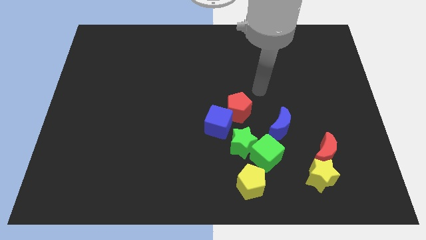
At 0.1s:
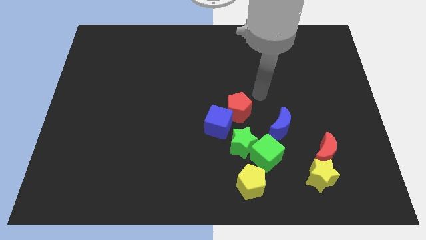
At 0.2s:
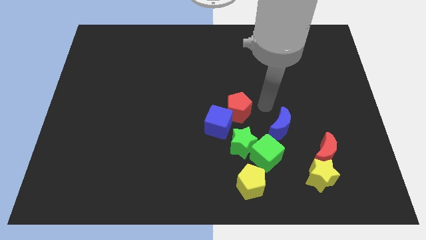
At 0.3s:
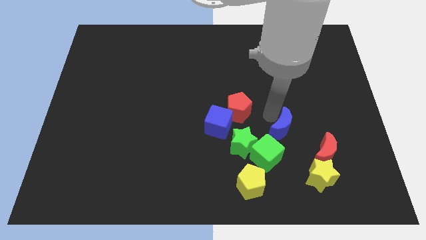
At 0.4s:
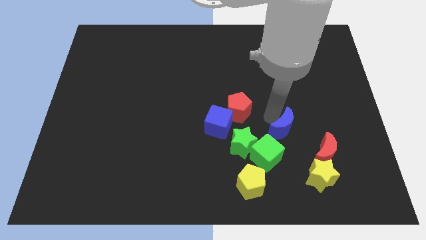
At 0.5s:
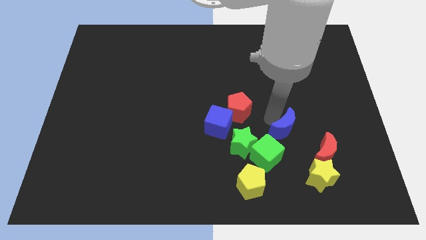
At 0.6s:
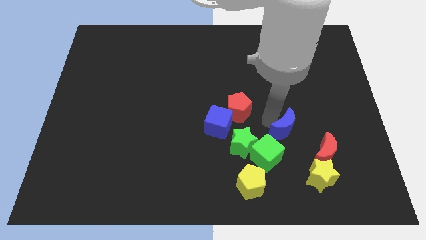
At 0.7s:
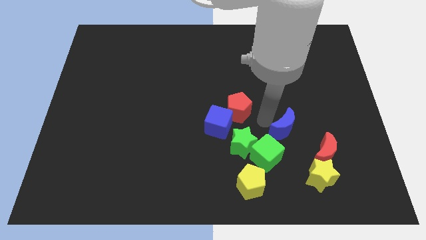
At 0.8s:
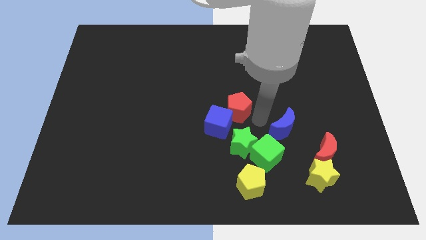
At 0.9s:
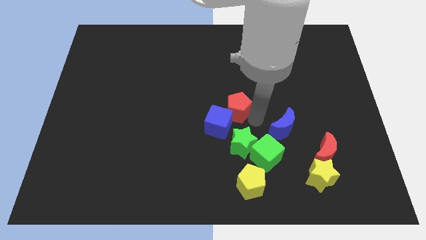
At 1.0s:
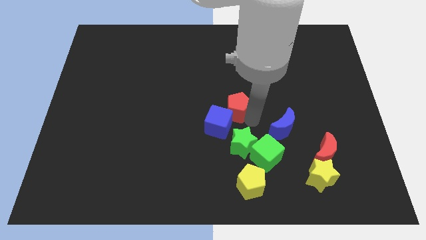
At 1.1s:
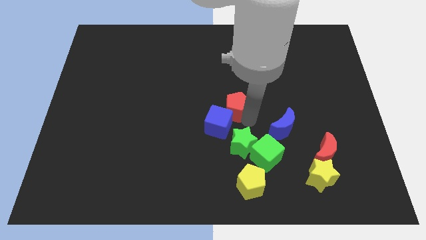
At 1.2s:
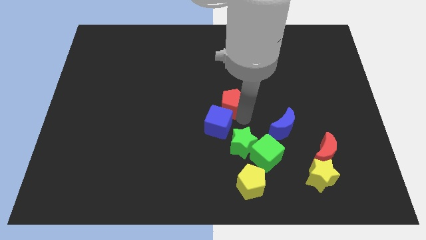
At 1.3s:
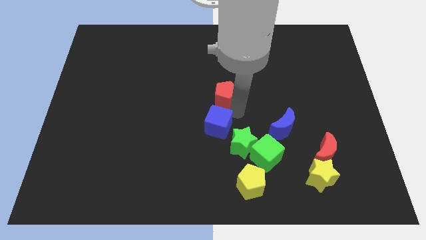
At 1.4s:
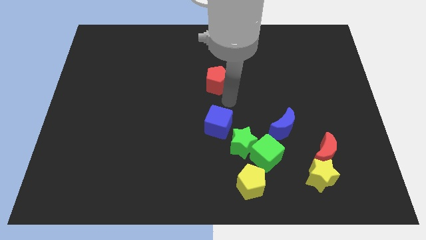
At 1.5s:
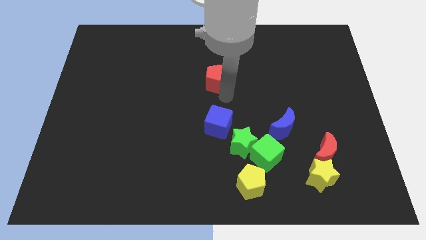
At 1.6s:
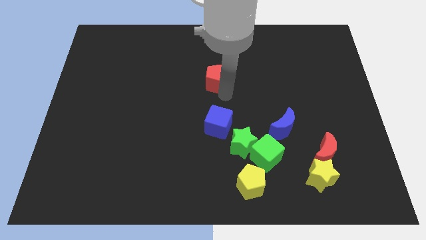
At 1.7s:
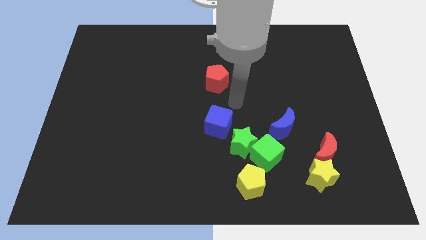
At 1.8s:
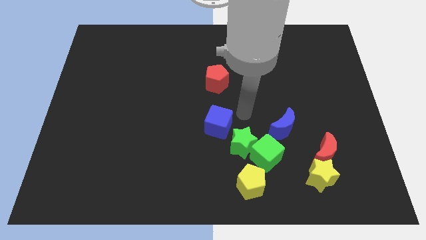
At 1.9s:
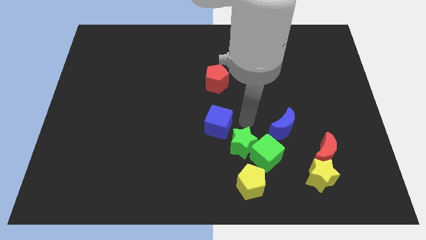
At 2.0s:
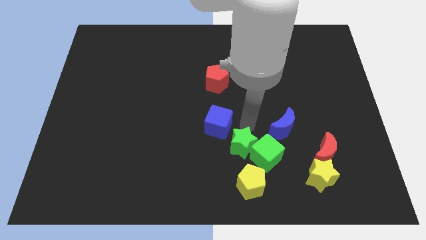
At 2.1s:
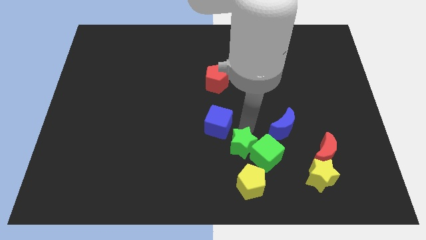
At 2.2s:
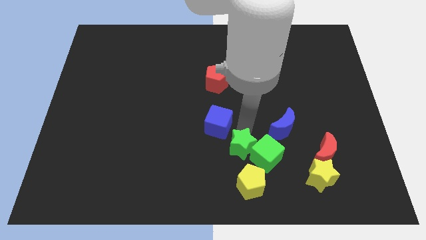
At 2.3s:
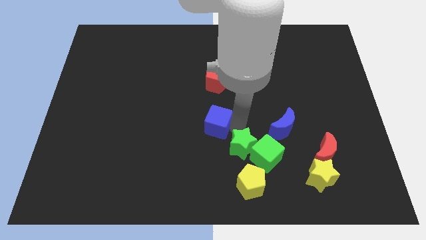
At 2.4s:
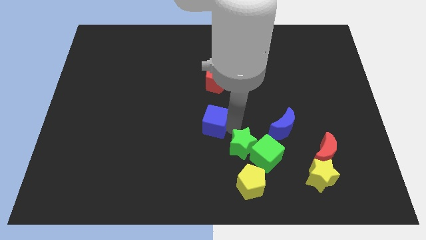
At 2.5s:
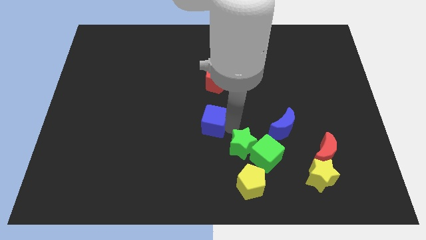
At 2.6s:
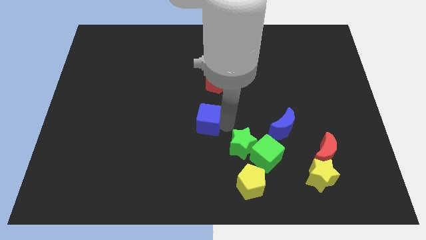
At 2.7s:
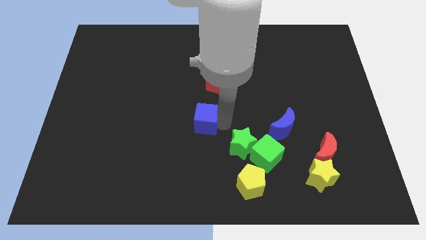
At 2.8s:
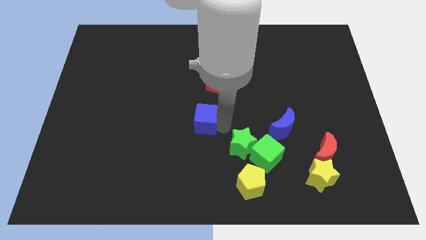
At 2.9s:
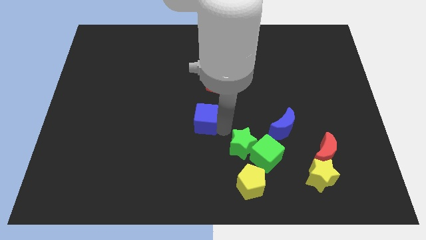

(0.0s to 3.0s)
separate the red pentagon from the blue cube

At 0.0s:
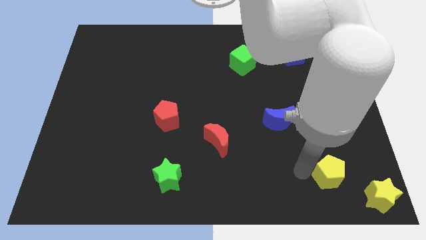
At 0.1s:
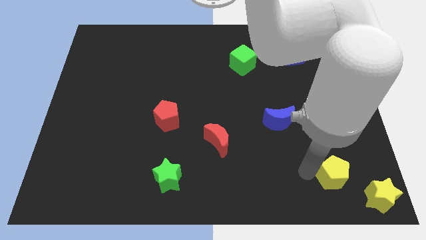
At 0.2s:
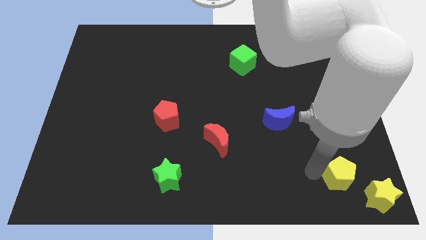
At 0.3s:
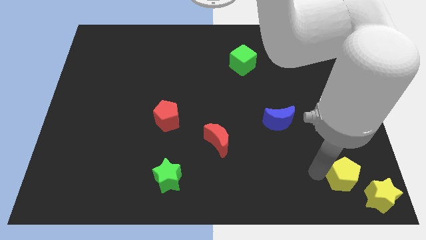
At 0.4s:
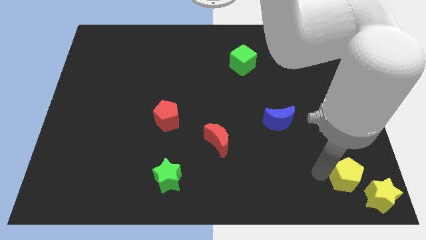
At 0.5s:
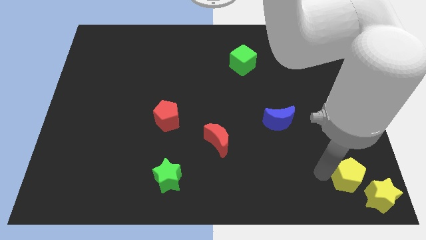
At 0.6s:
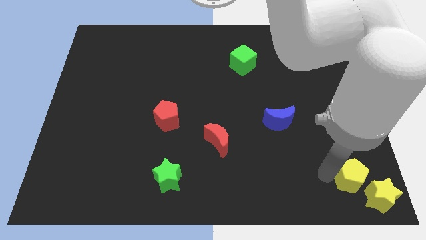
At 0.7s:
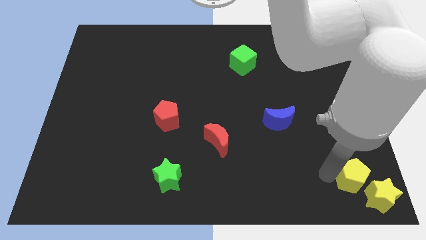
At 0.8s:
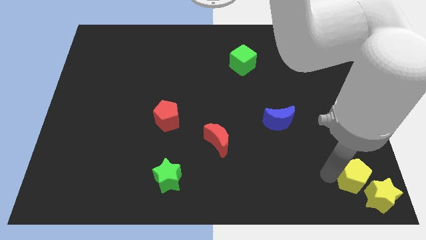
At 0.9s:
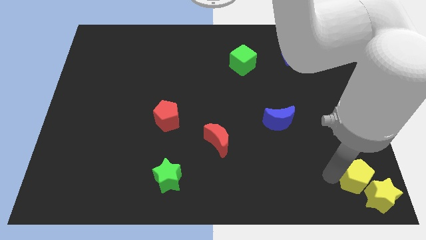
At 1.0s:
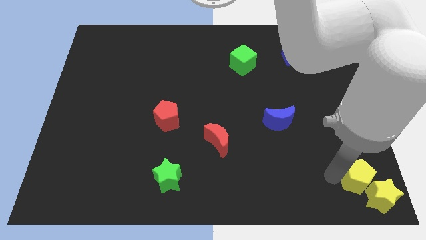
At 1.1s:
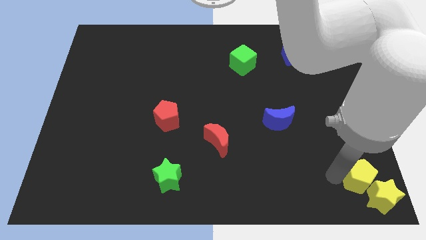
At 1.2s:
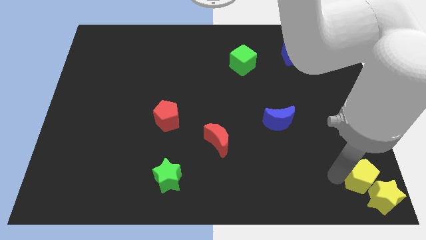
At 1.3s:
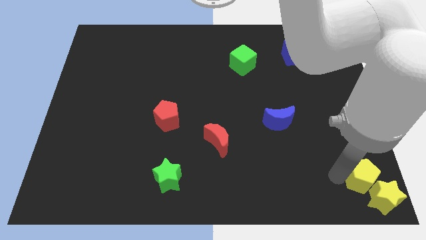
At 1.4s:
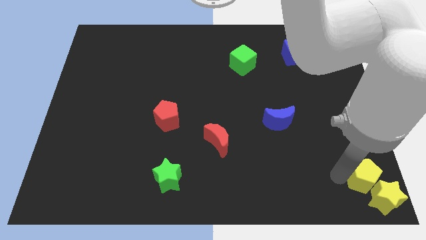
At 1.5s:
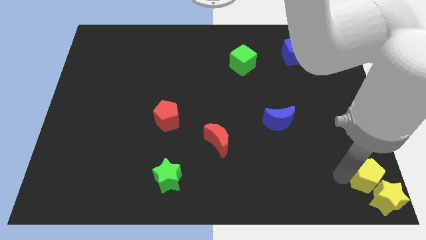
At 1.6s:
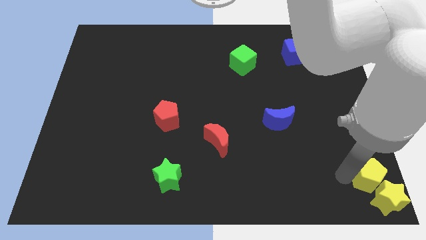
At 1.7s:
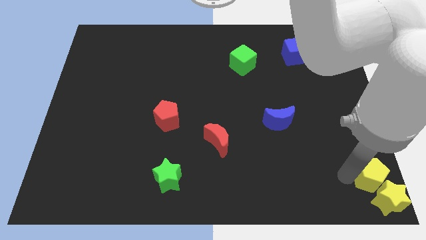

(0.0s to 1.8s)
move yellow pentagon into the yellow star

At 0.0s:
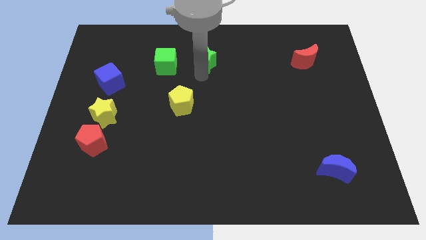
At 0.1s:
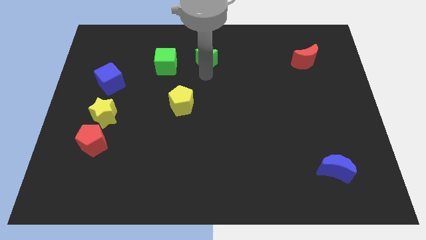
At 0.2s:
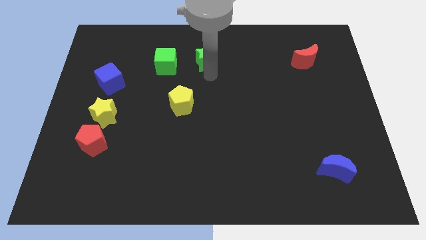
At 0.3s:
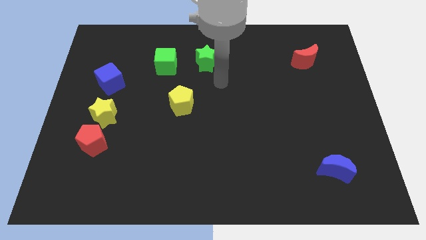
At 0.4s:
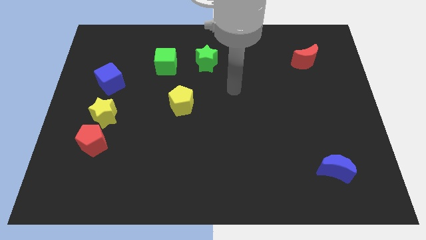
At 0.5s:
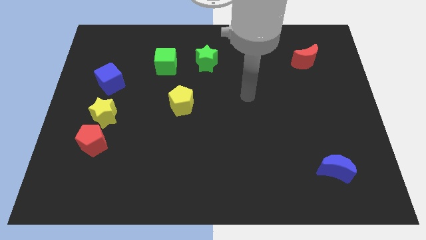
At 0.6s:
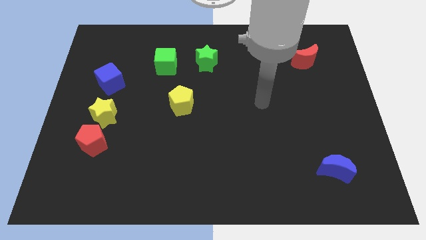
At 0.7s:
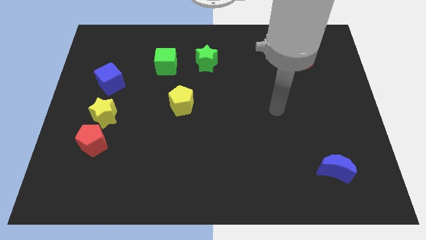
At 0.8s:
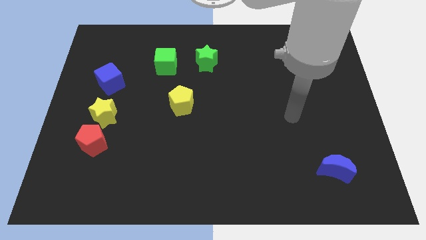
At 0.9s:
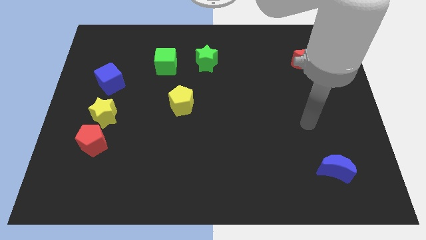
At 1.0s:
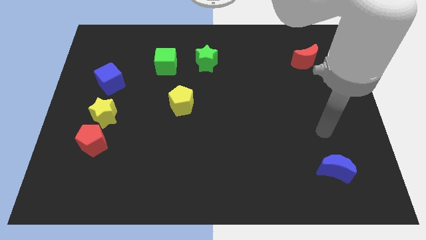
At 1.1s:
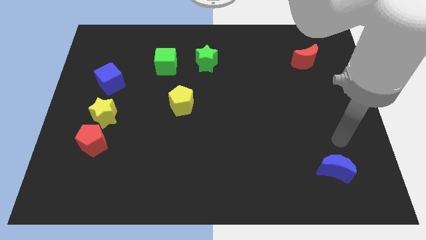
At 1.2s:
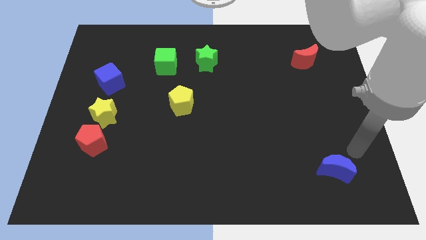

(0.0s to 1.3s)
move your arm to the right center of the board

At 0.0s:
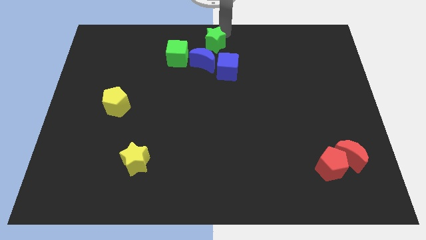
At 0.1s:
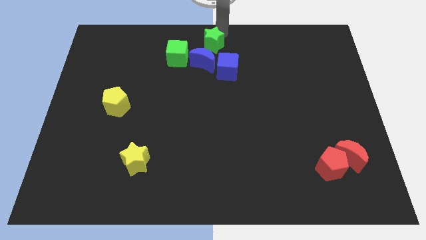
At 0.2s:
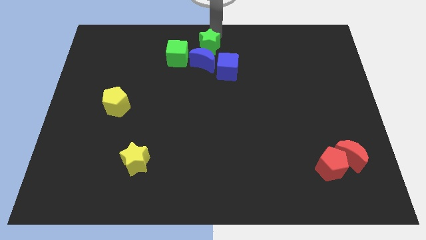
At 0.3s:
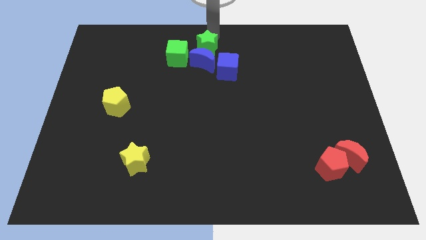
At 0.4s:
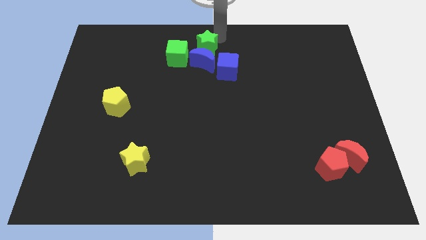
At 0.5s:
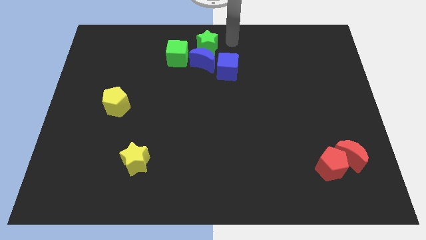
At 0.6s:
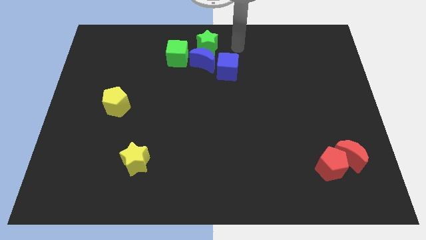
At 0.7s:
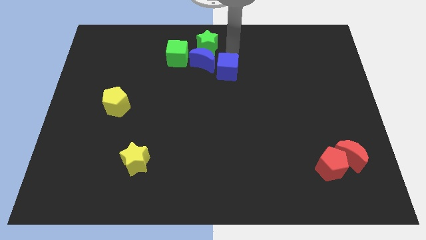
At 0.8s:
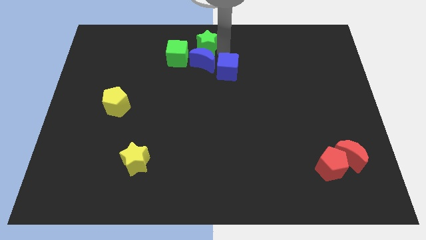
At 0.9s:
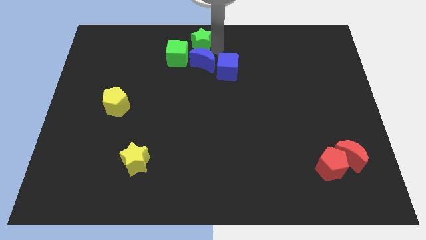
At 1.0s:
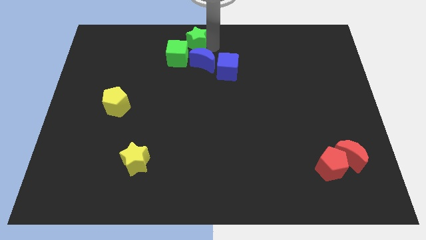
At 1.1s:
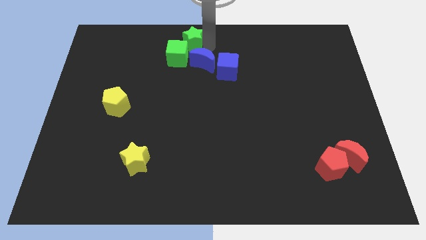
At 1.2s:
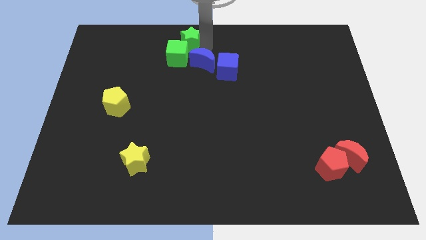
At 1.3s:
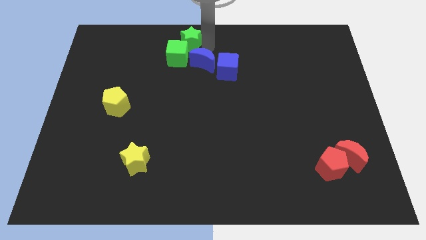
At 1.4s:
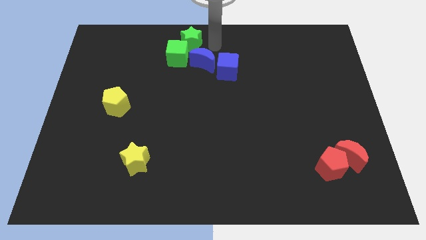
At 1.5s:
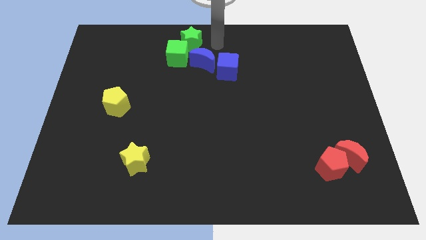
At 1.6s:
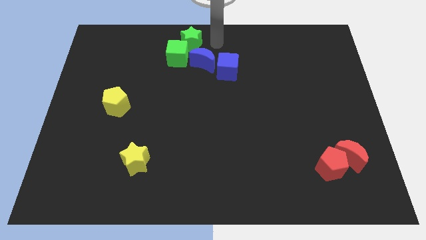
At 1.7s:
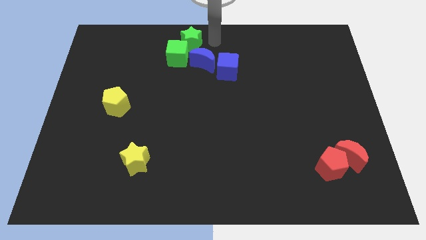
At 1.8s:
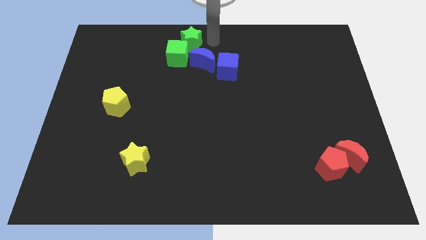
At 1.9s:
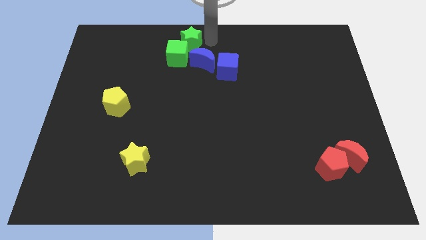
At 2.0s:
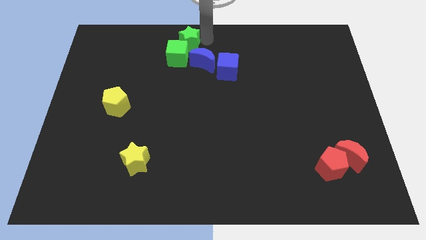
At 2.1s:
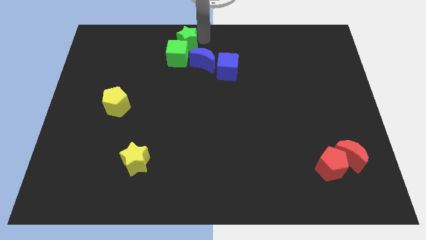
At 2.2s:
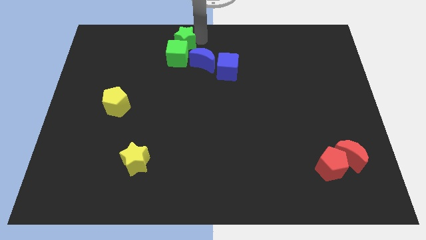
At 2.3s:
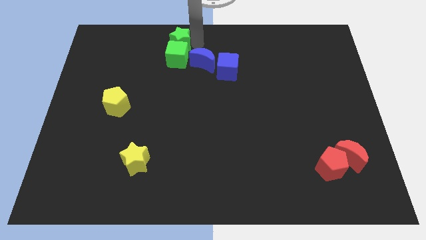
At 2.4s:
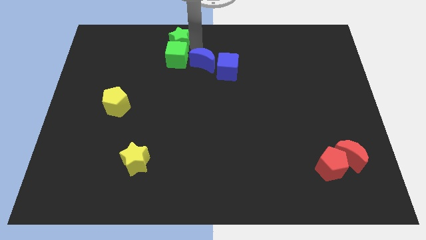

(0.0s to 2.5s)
push the green star into the green cube

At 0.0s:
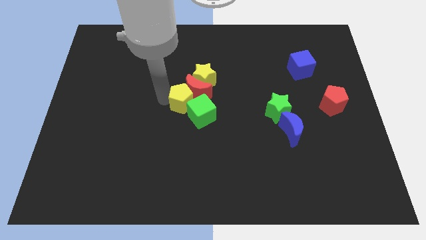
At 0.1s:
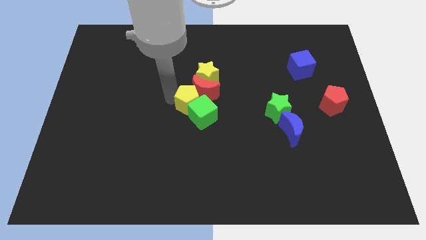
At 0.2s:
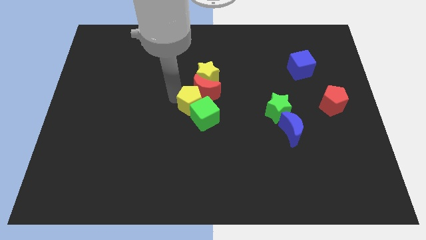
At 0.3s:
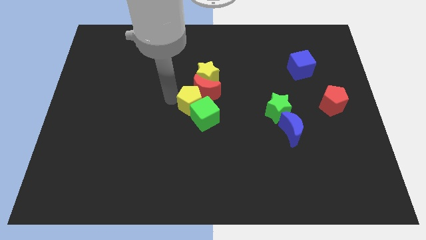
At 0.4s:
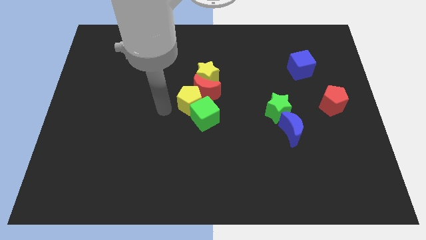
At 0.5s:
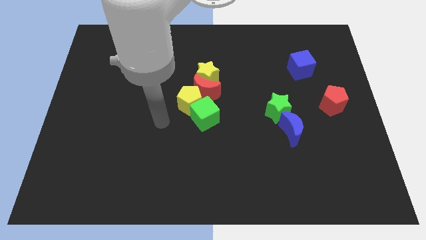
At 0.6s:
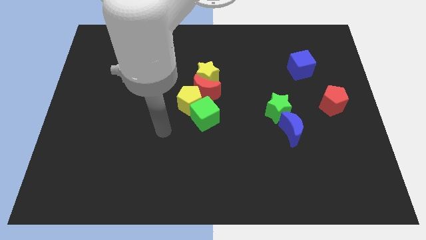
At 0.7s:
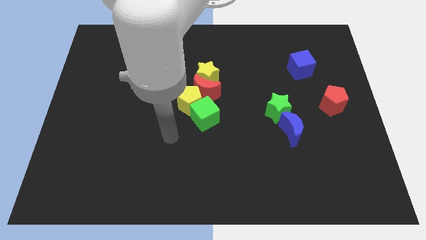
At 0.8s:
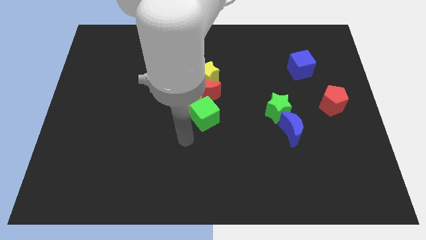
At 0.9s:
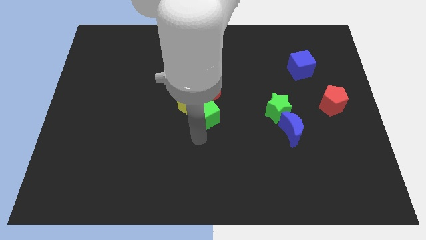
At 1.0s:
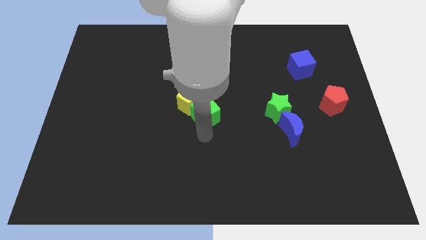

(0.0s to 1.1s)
place the arm down to the green cube
